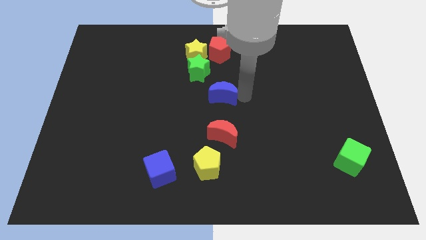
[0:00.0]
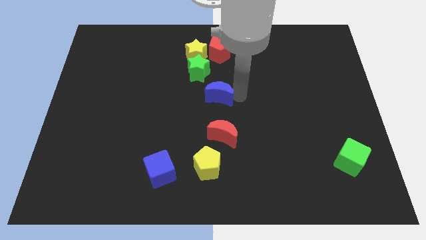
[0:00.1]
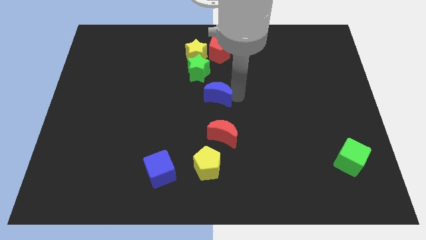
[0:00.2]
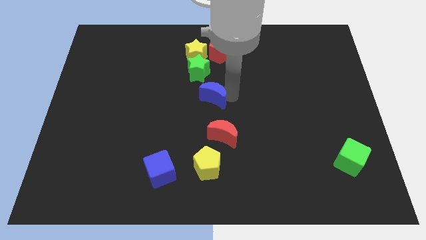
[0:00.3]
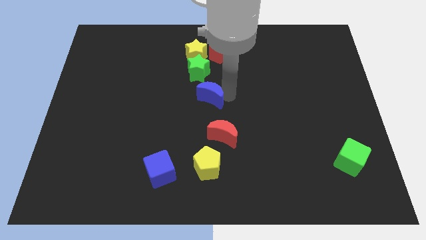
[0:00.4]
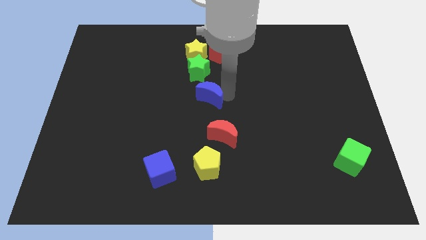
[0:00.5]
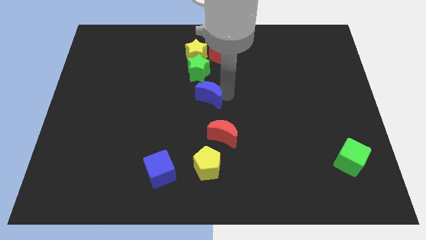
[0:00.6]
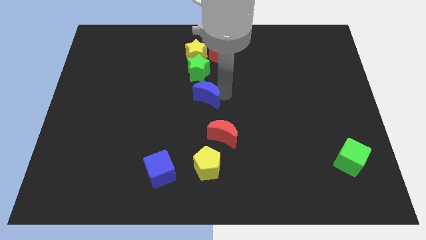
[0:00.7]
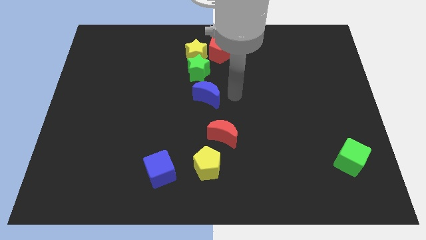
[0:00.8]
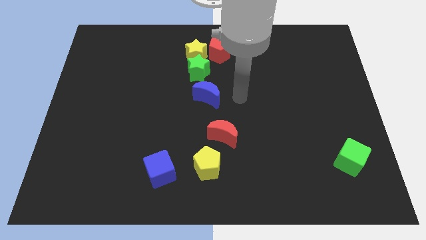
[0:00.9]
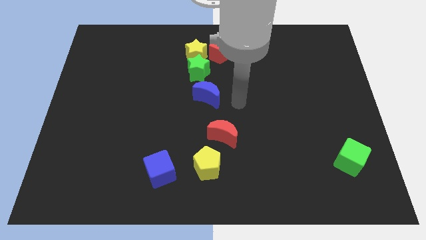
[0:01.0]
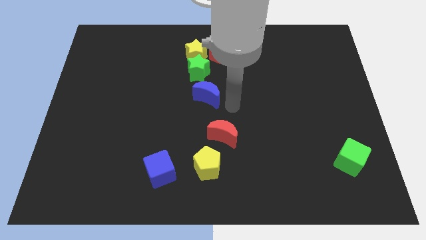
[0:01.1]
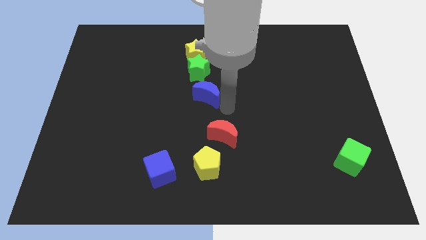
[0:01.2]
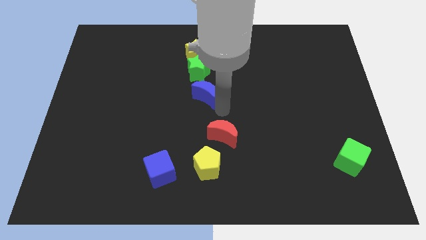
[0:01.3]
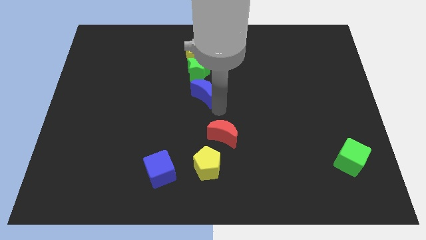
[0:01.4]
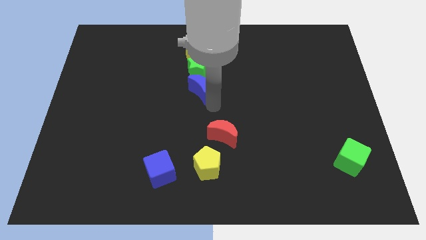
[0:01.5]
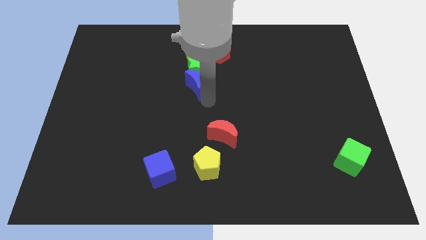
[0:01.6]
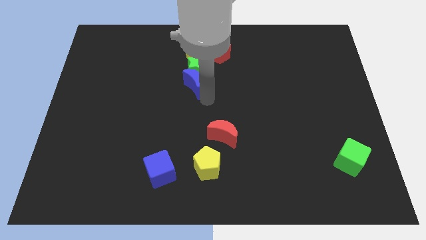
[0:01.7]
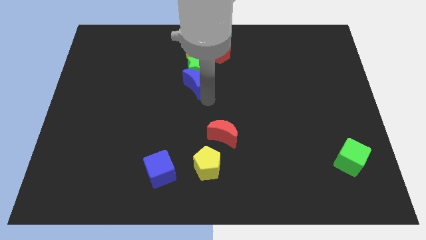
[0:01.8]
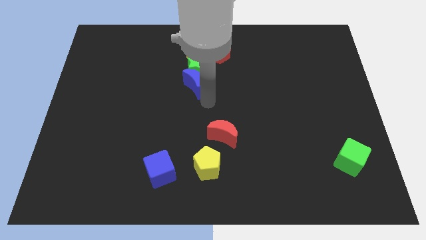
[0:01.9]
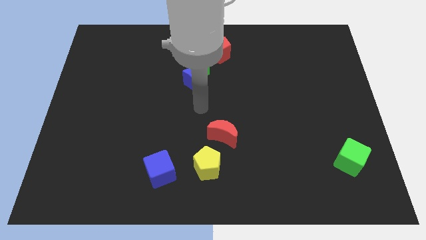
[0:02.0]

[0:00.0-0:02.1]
move the blue moon to the bottom of green star

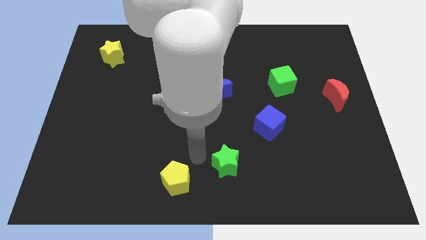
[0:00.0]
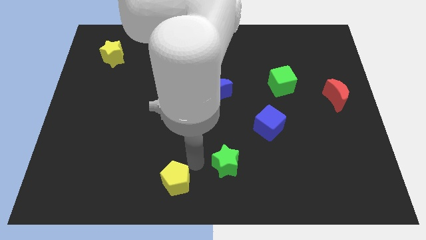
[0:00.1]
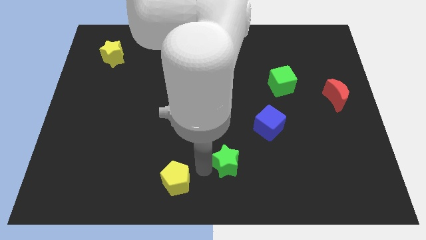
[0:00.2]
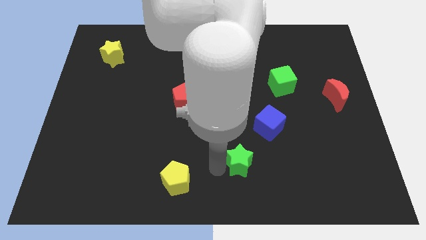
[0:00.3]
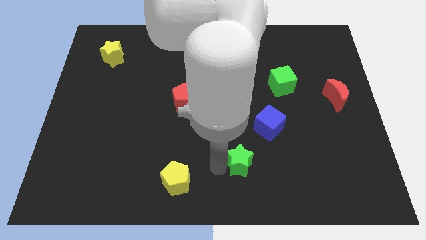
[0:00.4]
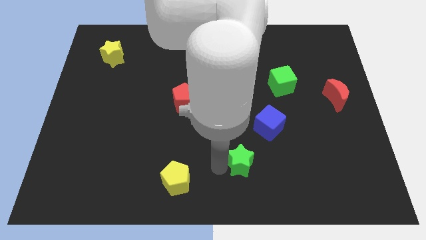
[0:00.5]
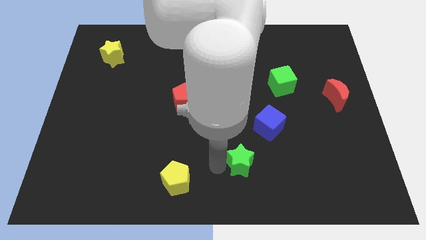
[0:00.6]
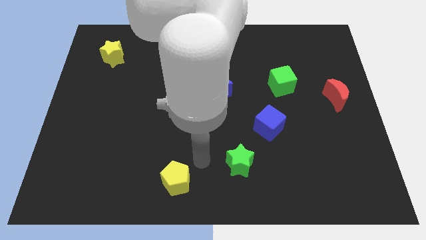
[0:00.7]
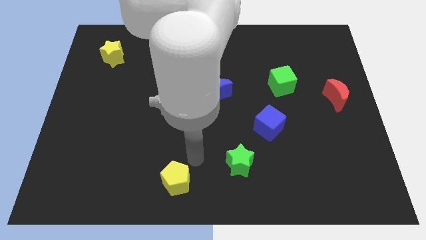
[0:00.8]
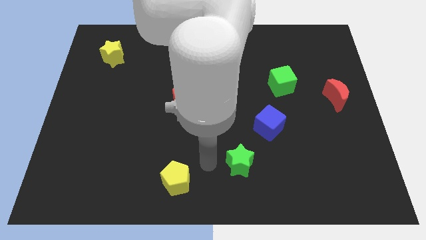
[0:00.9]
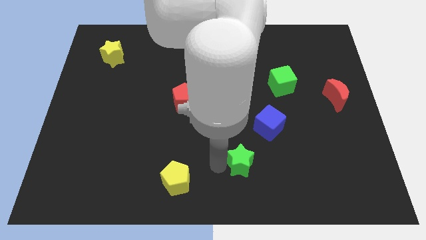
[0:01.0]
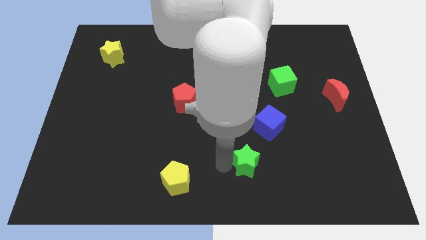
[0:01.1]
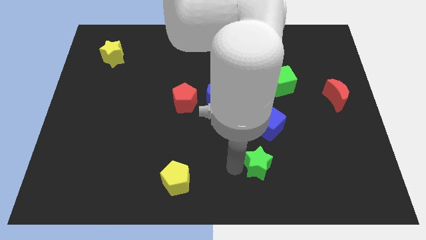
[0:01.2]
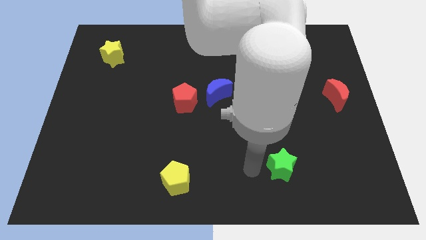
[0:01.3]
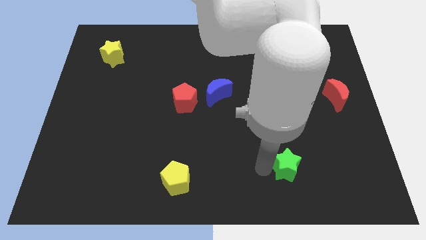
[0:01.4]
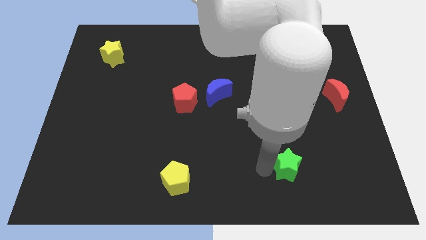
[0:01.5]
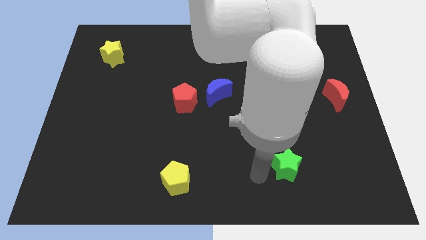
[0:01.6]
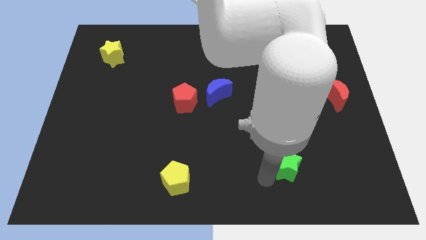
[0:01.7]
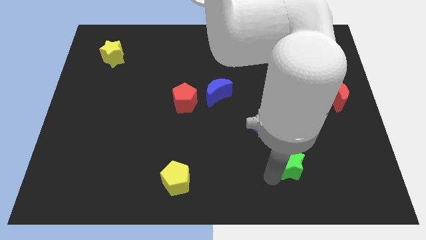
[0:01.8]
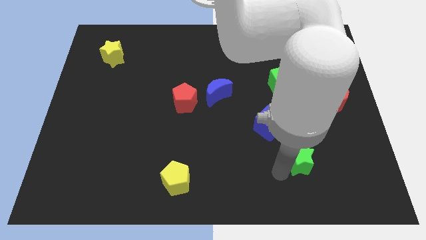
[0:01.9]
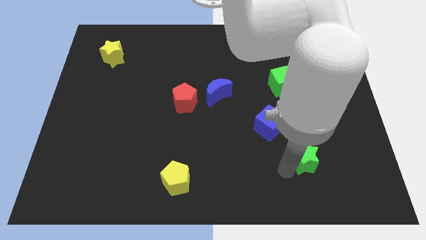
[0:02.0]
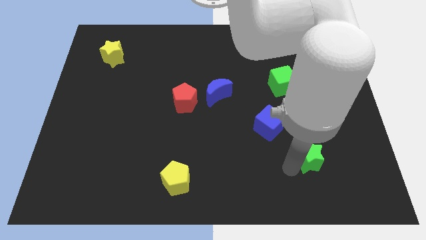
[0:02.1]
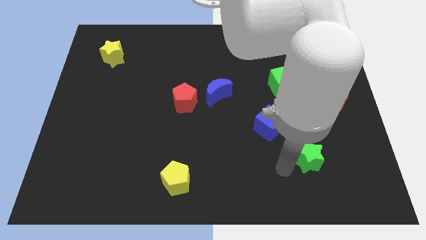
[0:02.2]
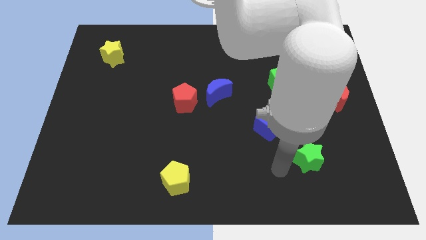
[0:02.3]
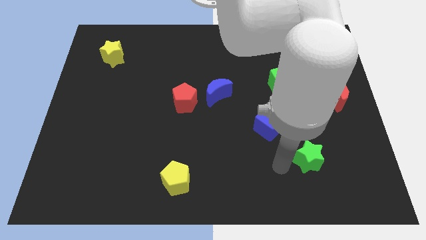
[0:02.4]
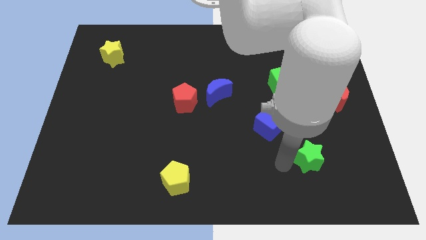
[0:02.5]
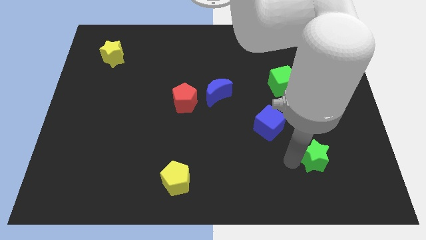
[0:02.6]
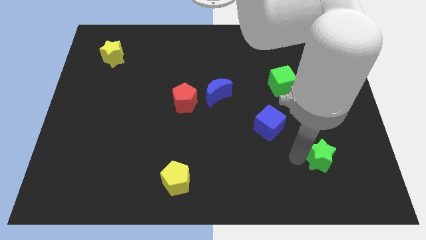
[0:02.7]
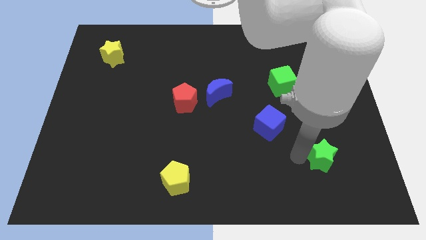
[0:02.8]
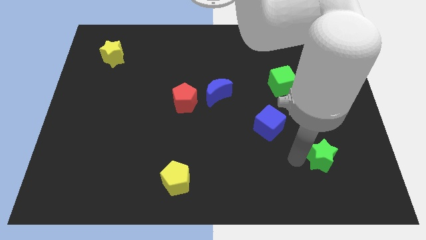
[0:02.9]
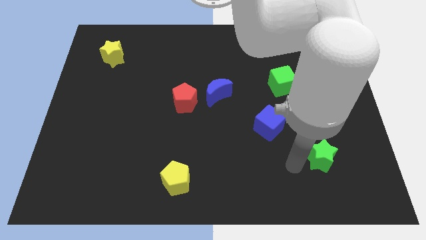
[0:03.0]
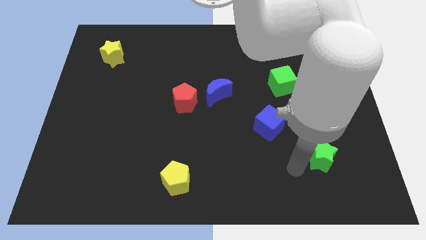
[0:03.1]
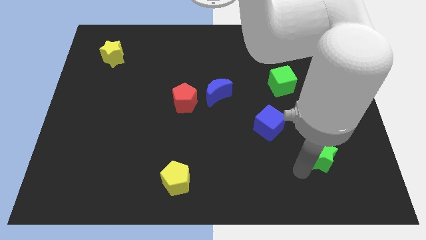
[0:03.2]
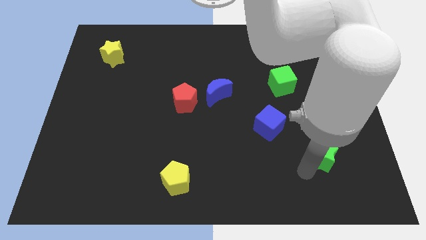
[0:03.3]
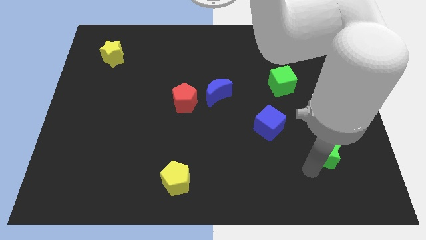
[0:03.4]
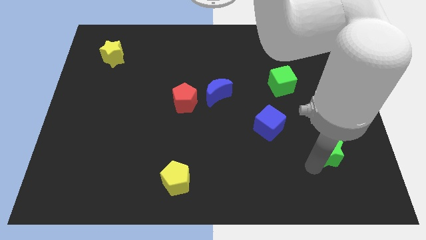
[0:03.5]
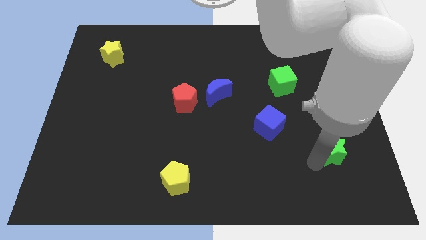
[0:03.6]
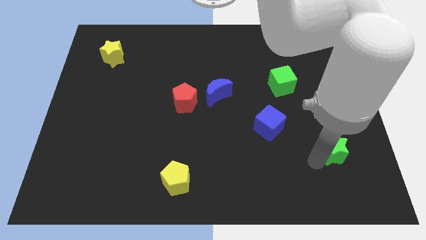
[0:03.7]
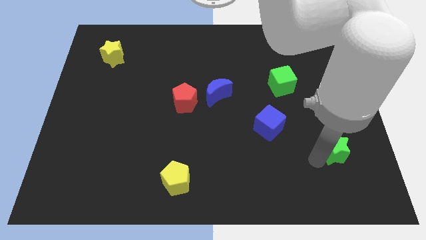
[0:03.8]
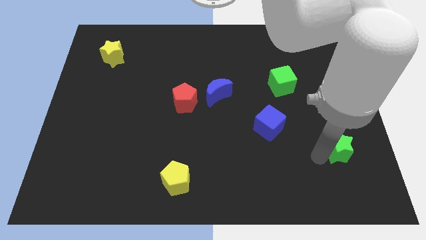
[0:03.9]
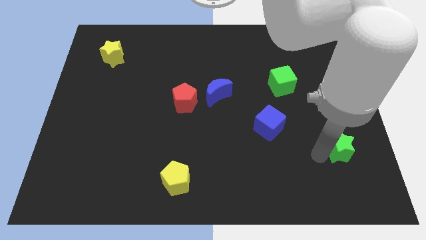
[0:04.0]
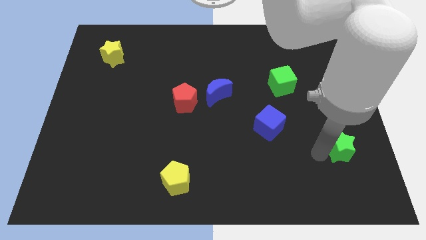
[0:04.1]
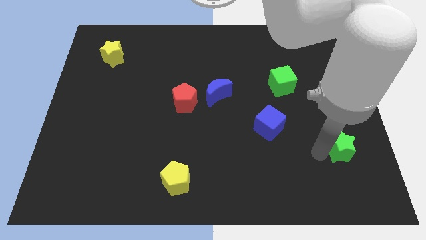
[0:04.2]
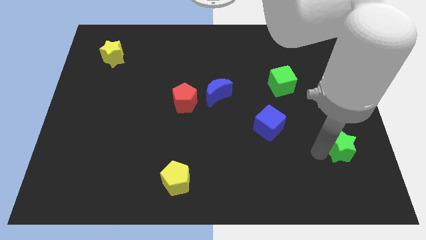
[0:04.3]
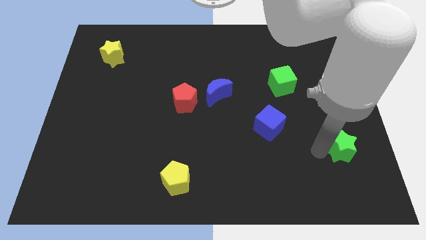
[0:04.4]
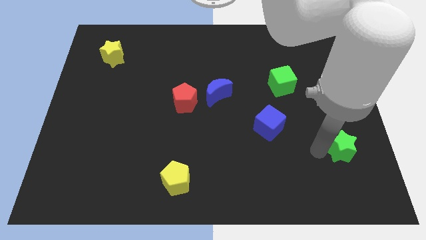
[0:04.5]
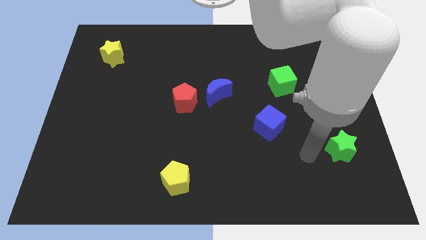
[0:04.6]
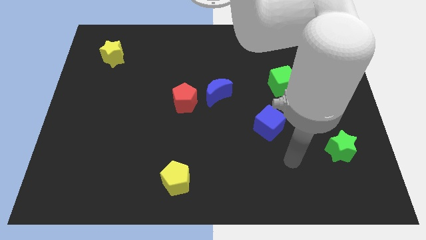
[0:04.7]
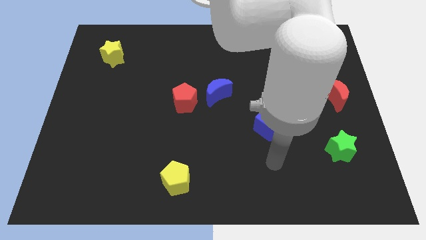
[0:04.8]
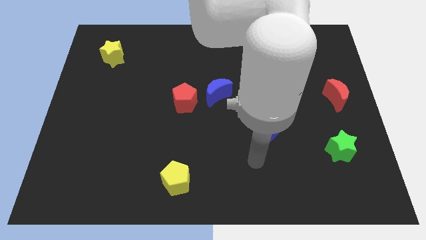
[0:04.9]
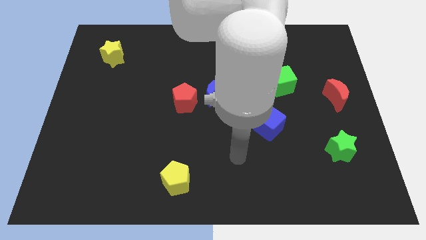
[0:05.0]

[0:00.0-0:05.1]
slide green star below red moon

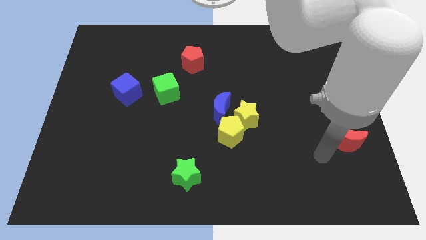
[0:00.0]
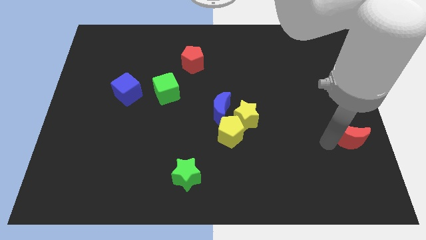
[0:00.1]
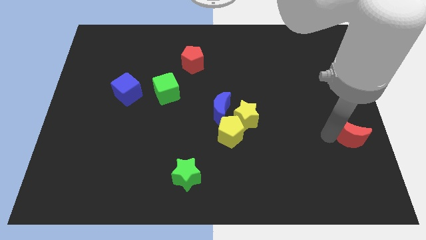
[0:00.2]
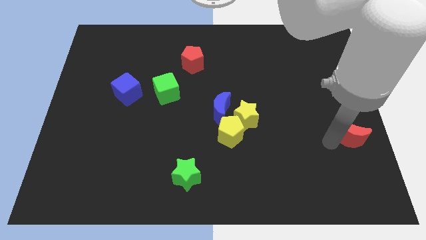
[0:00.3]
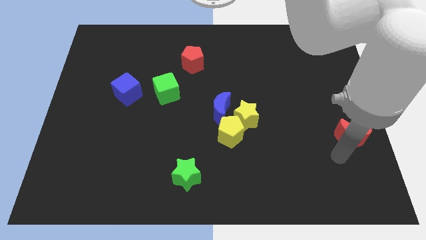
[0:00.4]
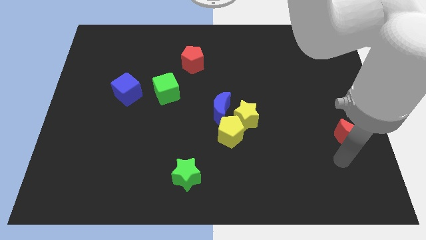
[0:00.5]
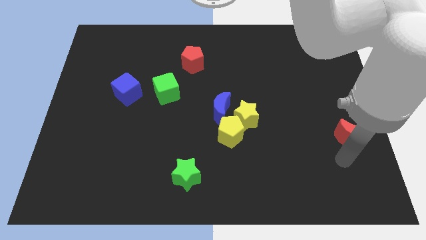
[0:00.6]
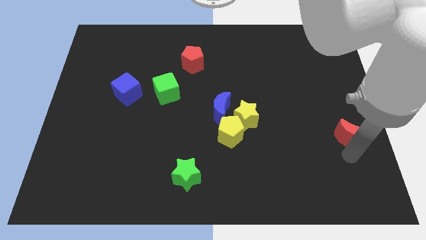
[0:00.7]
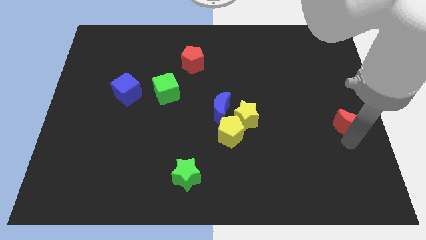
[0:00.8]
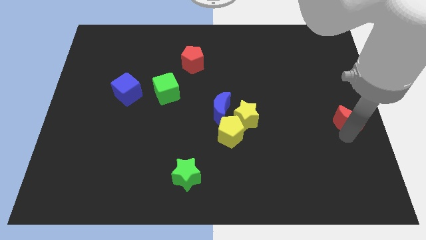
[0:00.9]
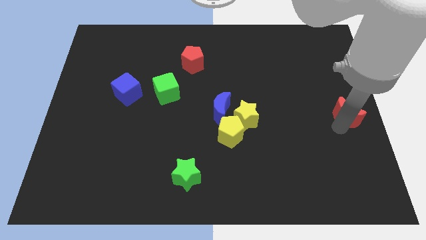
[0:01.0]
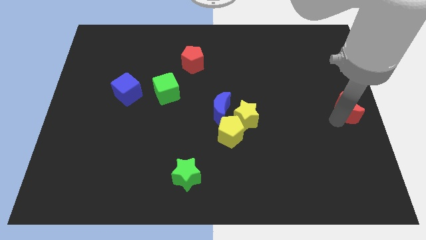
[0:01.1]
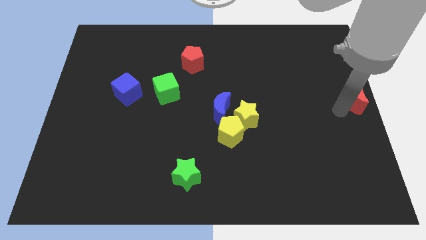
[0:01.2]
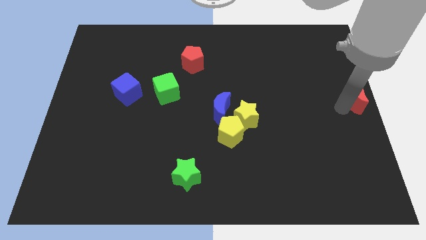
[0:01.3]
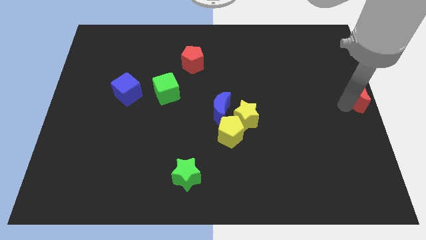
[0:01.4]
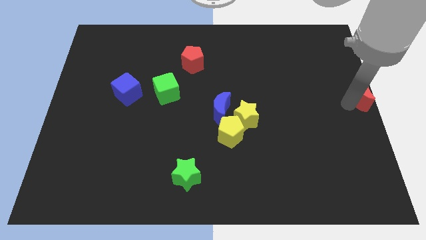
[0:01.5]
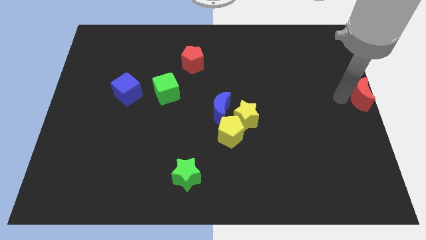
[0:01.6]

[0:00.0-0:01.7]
place the red crescent at the centre right of the board
